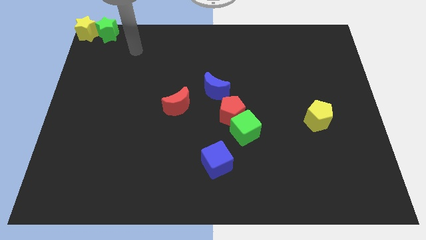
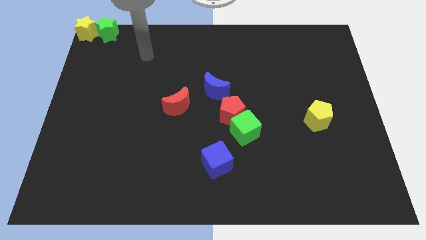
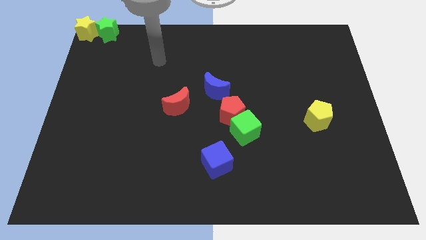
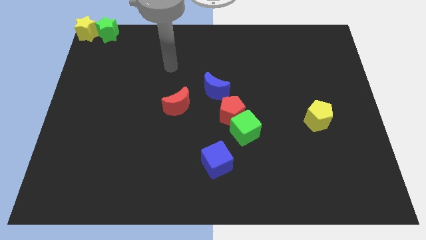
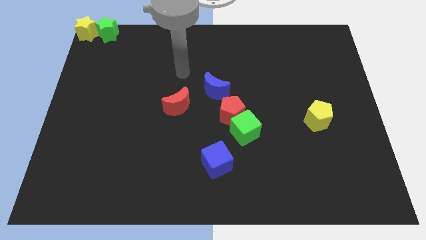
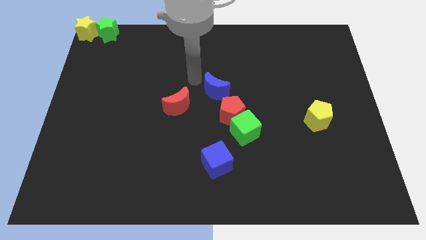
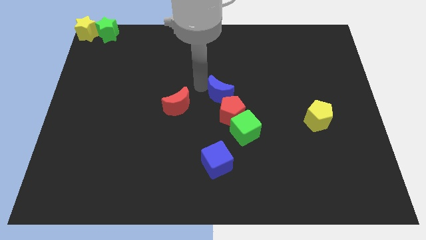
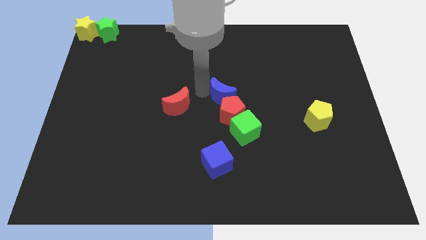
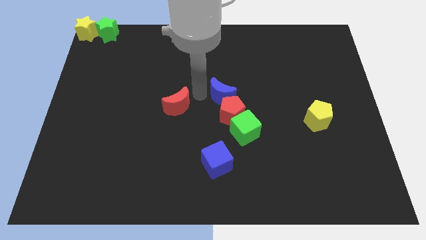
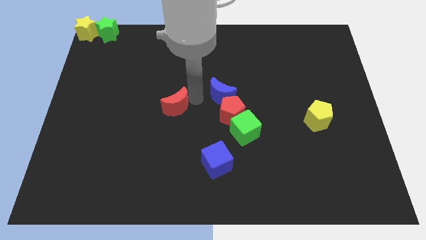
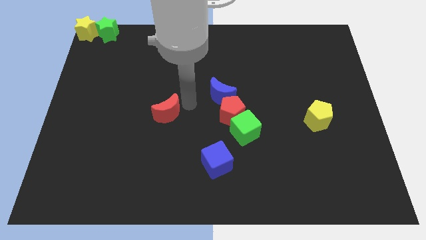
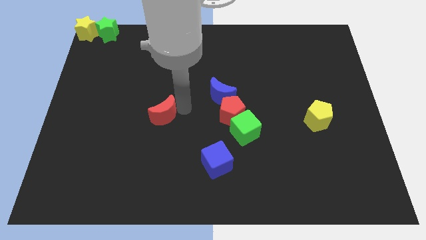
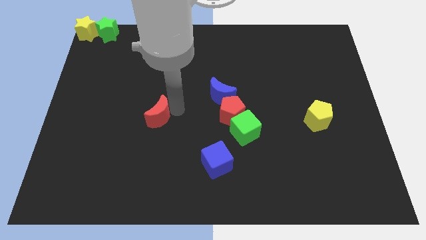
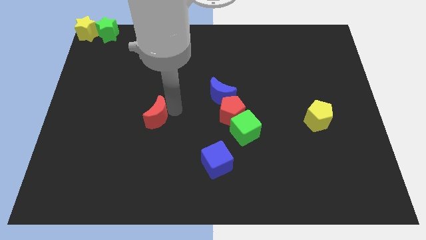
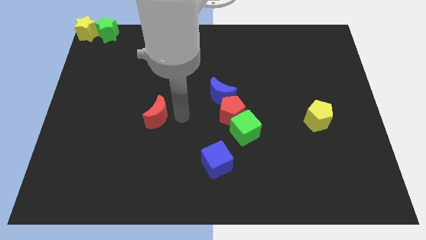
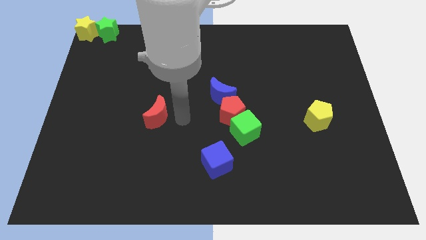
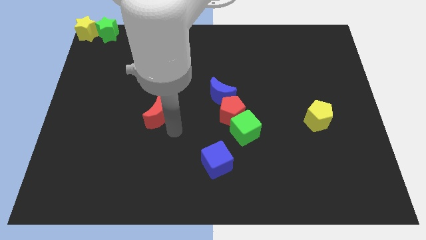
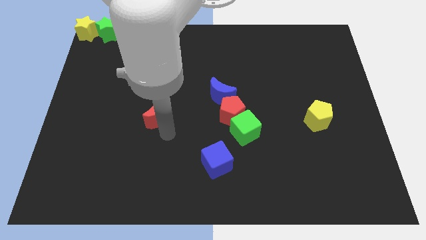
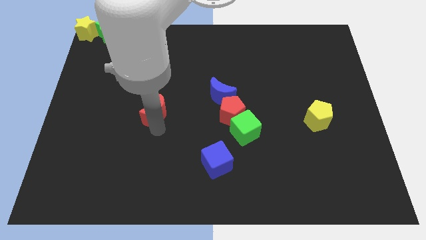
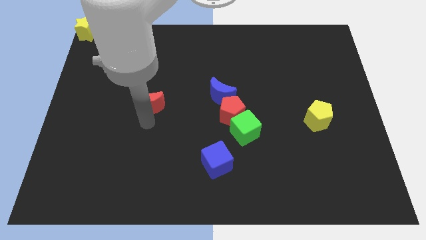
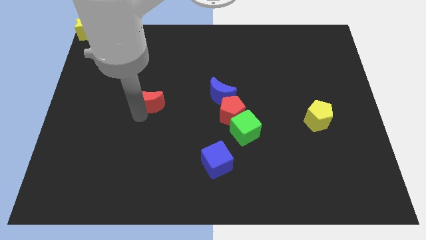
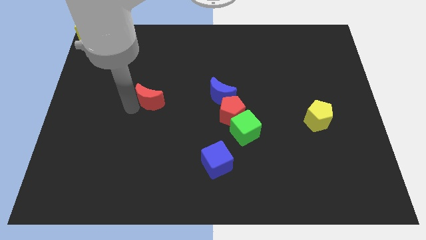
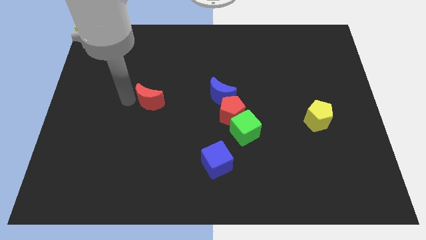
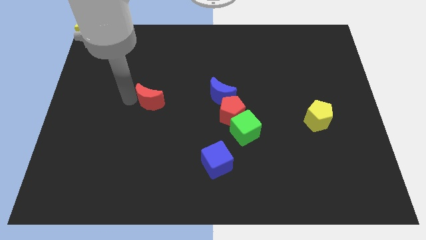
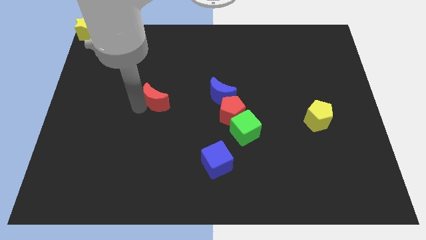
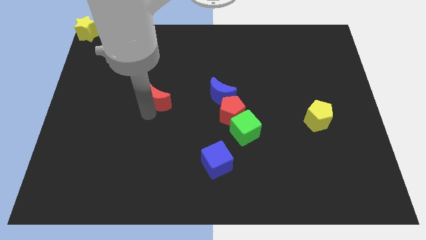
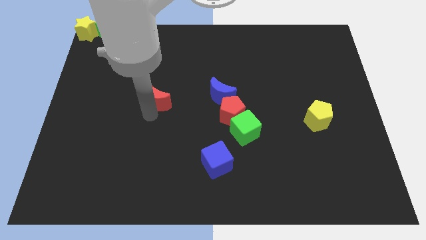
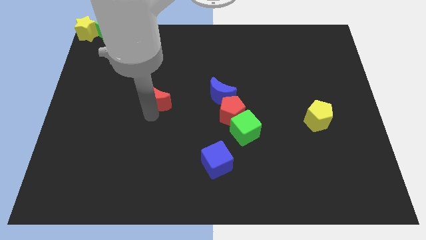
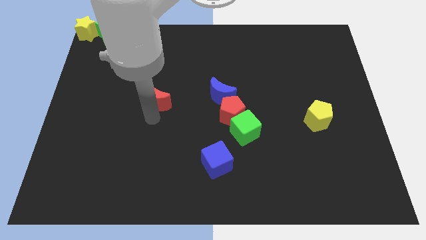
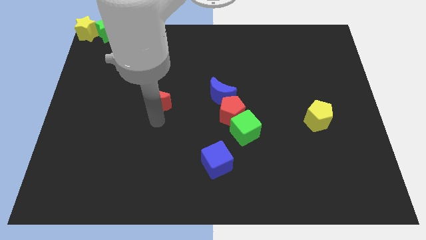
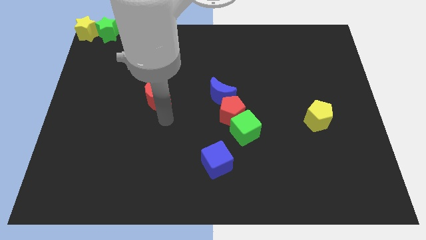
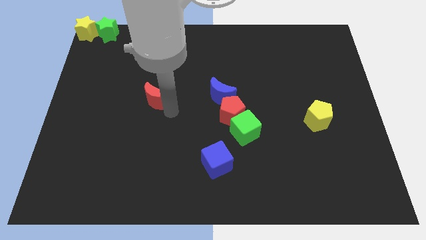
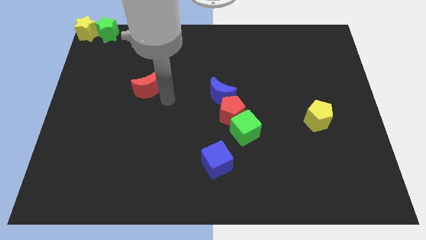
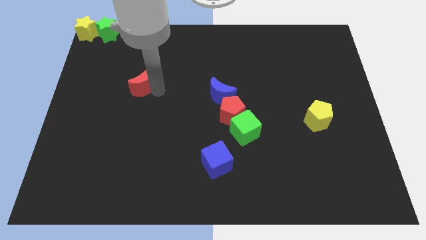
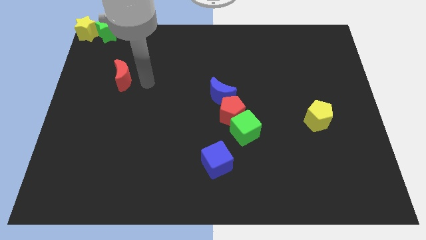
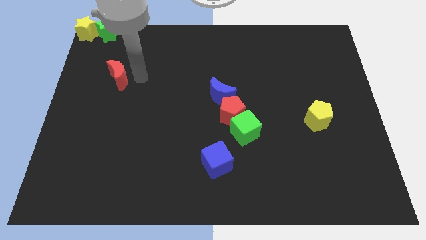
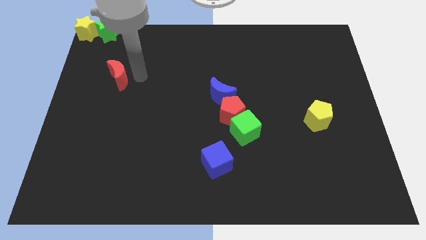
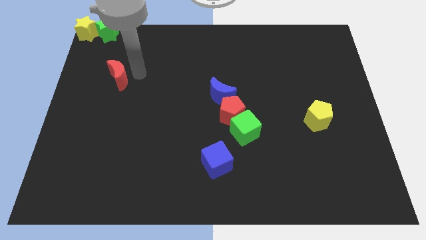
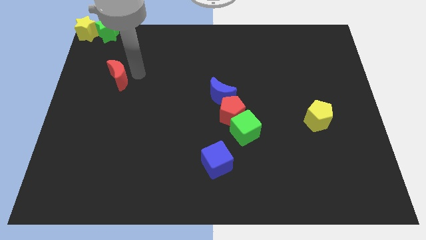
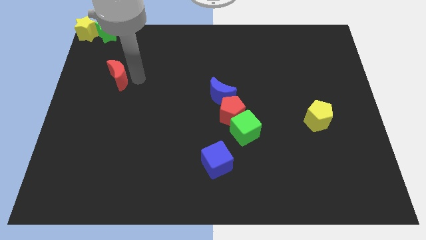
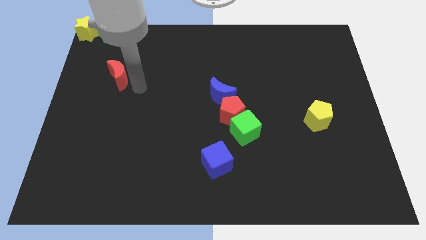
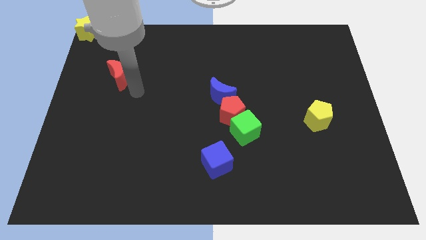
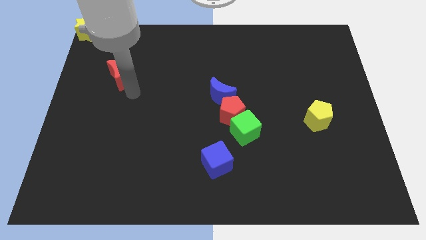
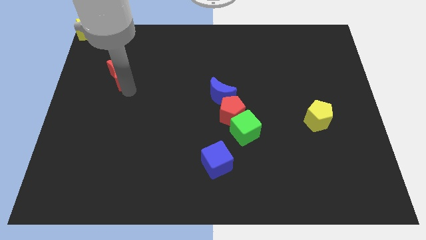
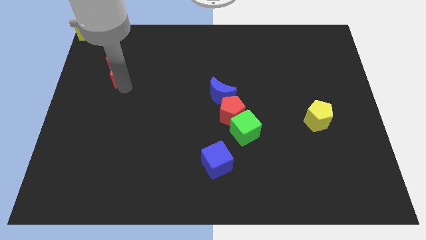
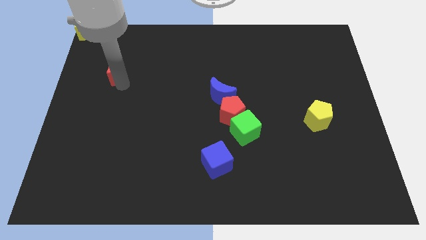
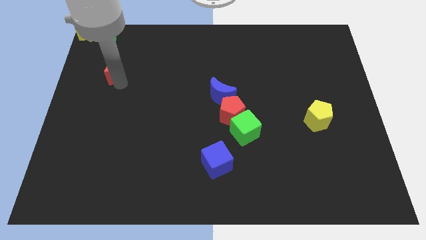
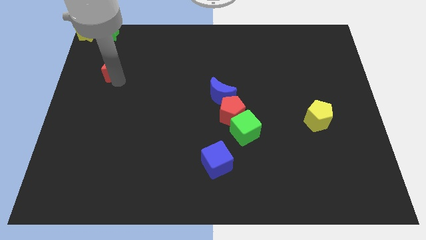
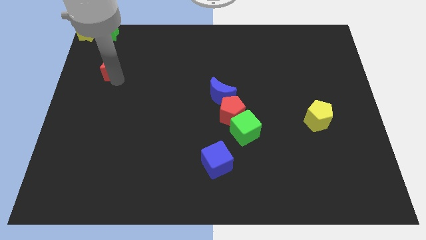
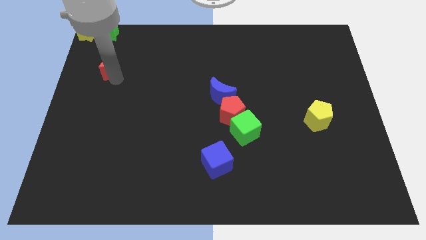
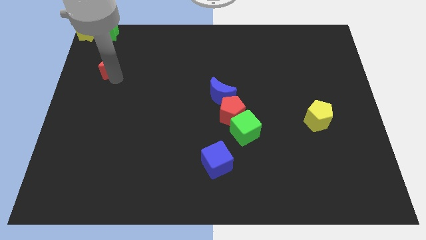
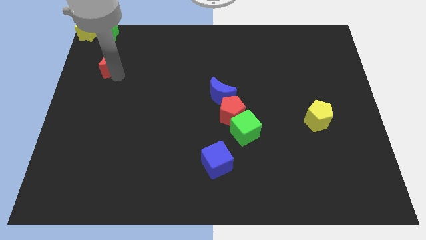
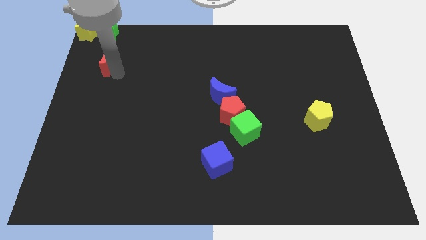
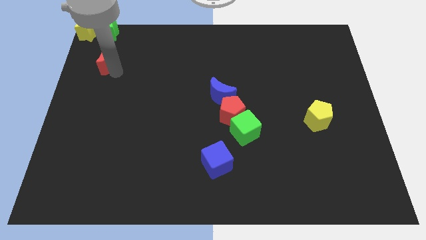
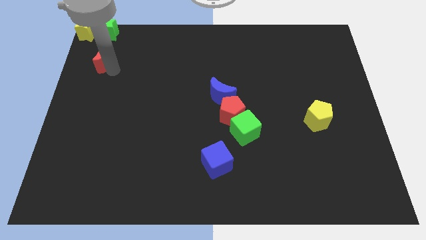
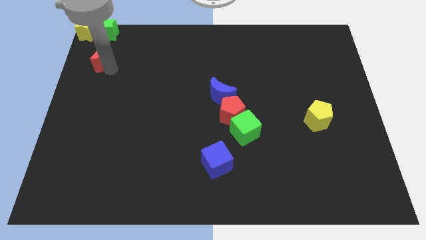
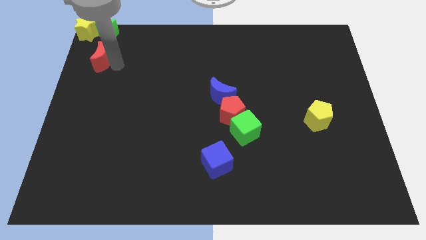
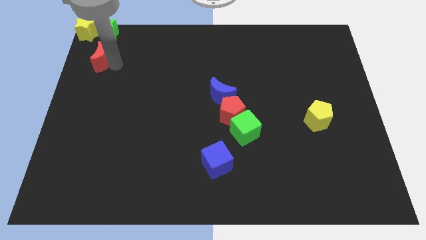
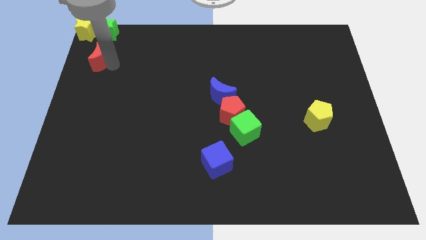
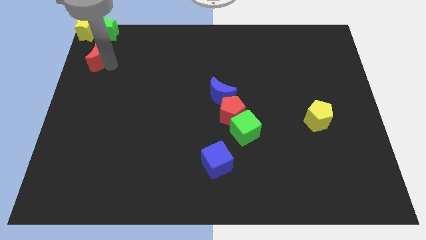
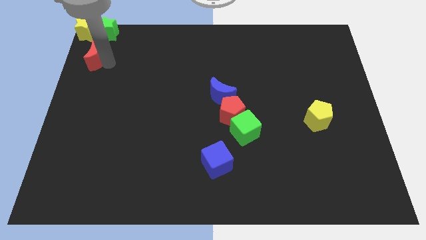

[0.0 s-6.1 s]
move the red moon towards the bottom side of the two stars

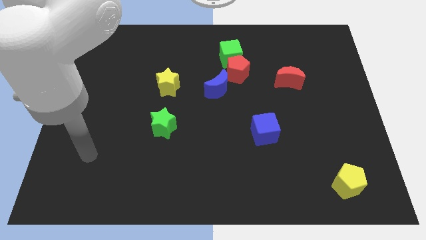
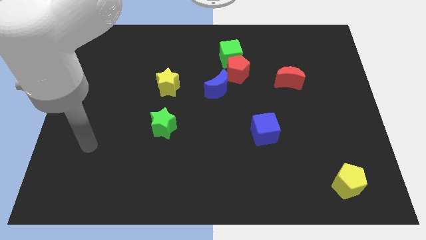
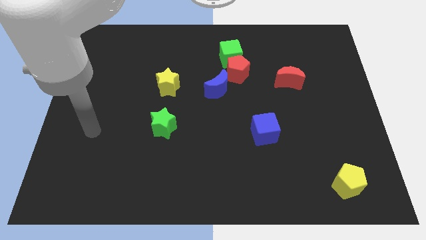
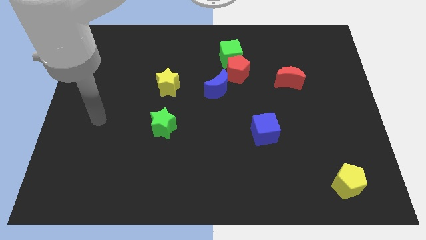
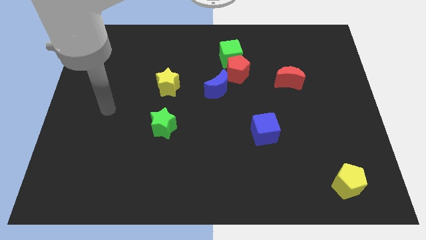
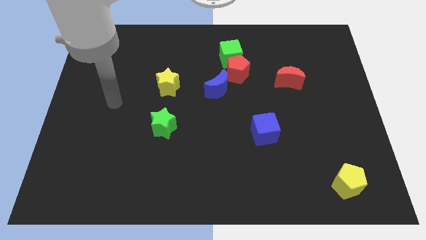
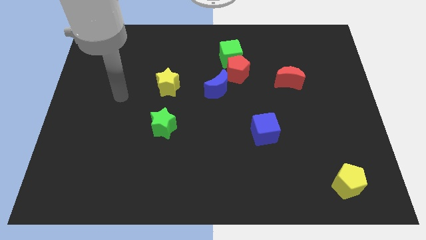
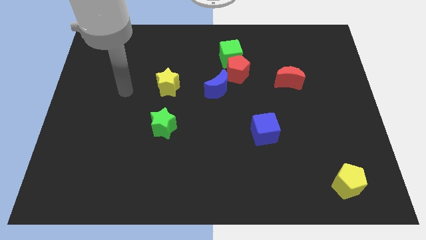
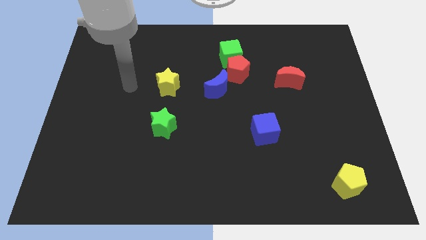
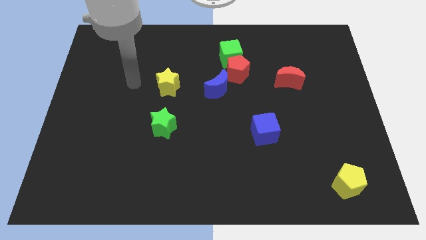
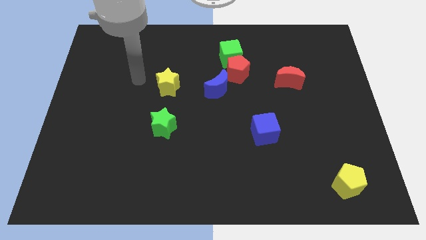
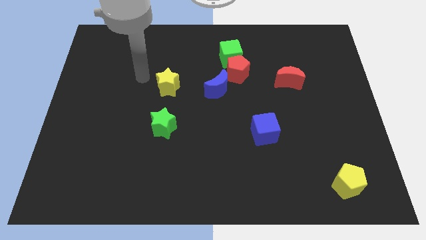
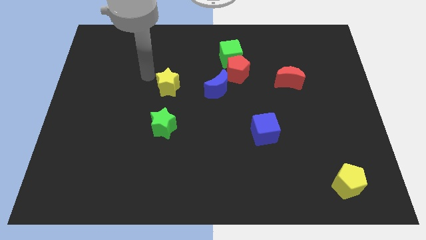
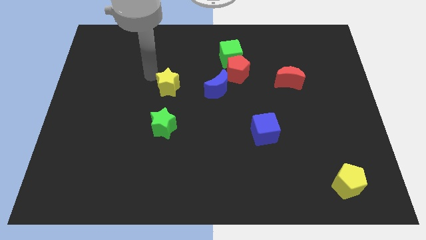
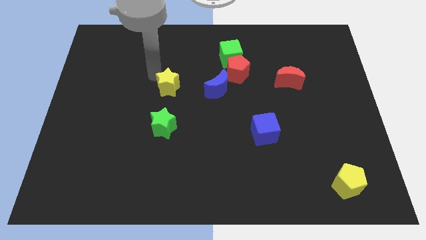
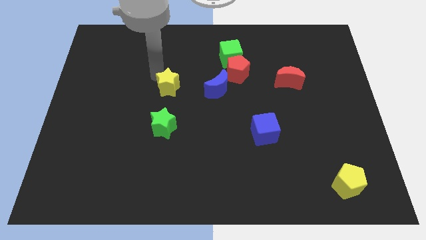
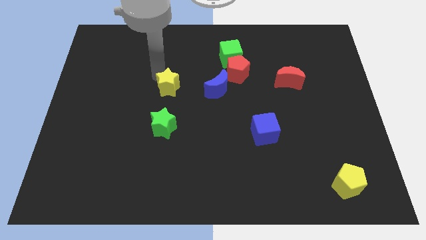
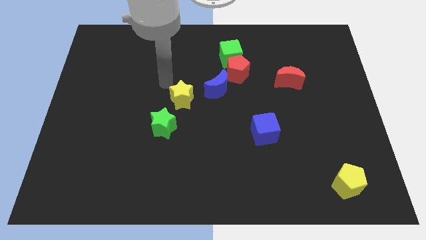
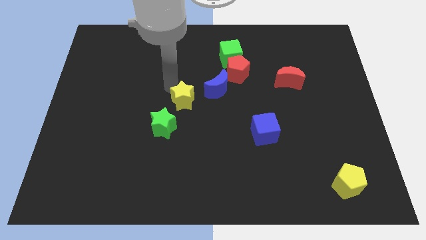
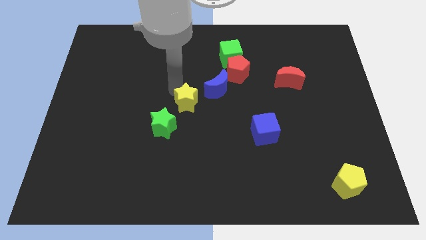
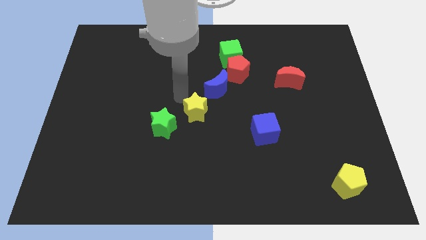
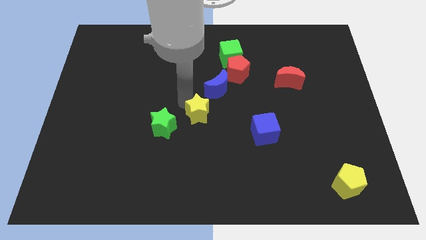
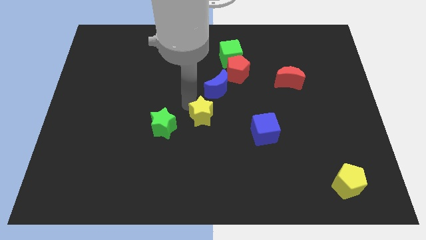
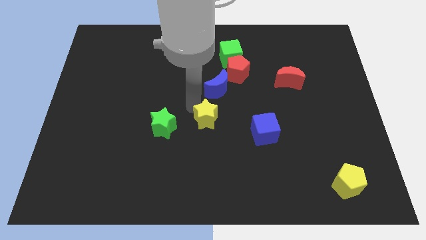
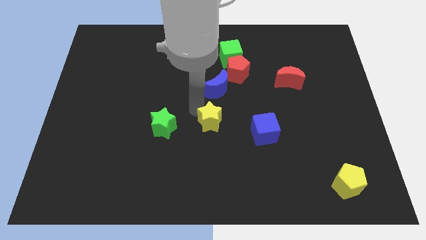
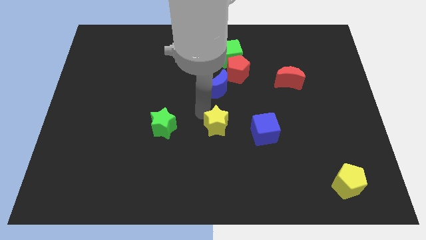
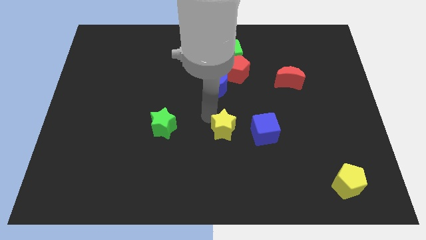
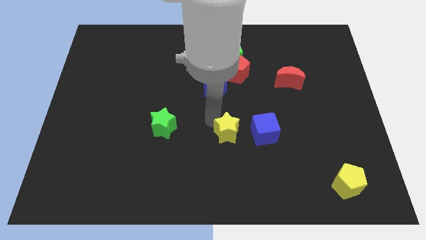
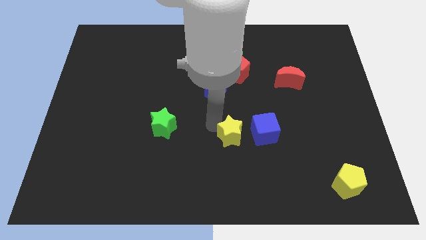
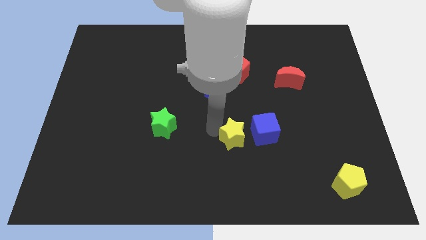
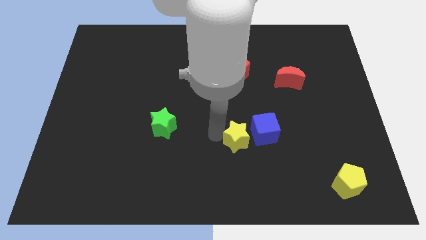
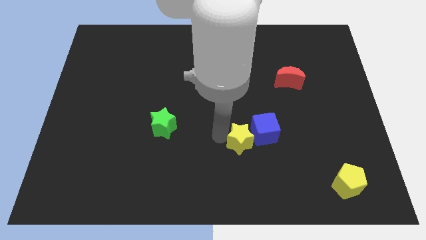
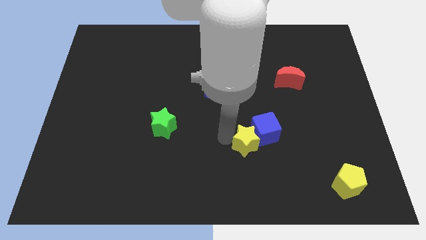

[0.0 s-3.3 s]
move the yellow star left to the blue cube
